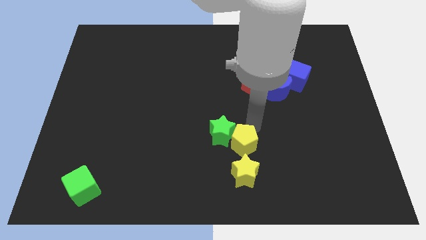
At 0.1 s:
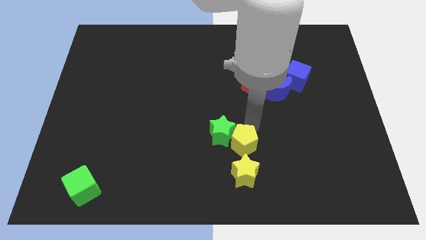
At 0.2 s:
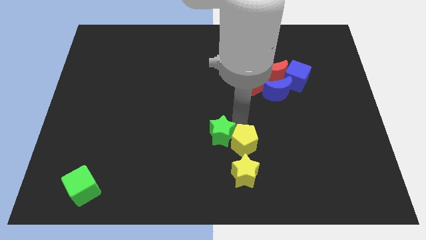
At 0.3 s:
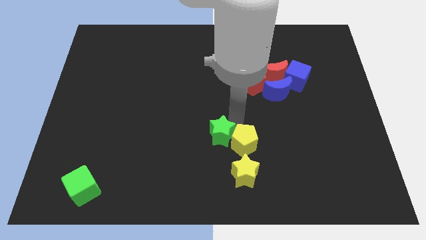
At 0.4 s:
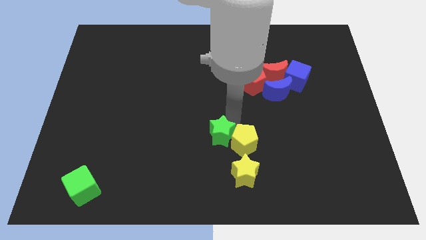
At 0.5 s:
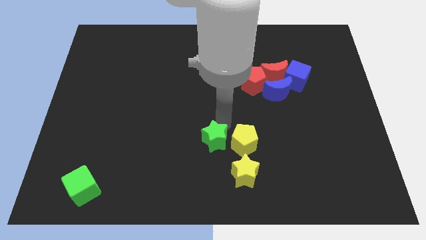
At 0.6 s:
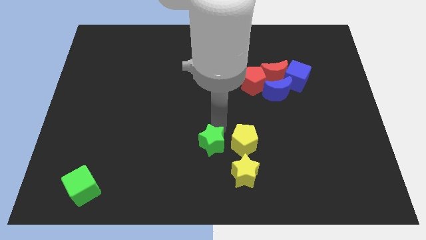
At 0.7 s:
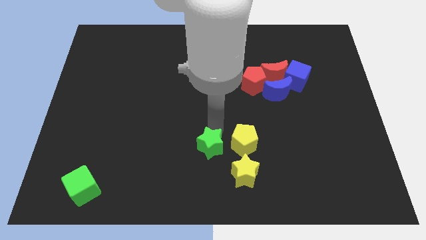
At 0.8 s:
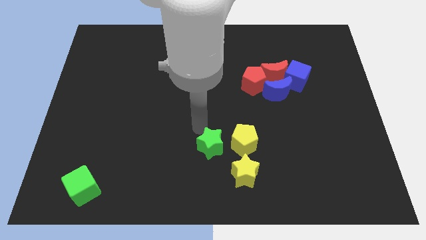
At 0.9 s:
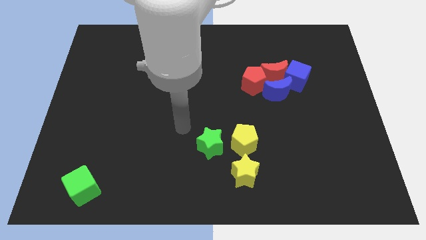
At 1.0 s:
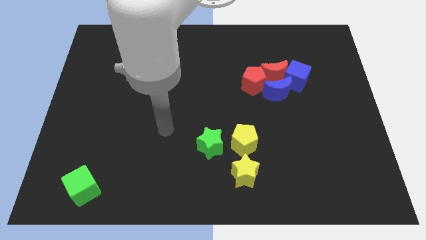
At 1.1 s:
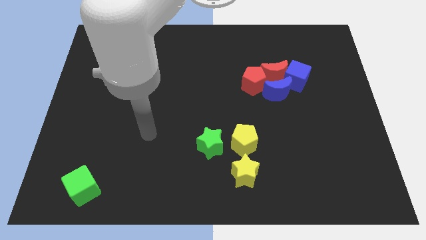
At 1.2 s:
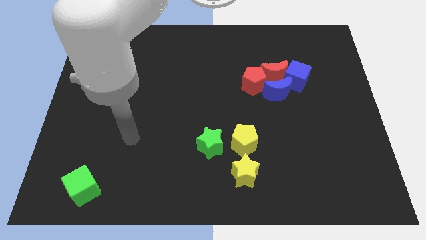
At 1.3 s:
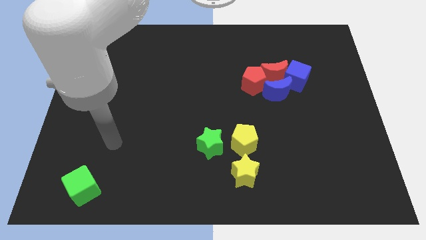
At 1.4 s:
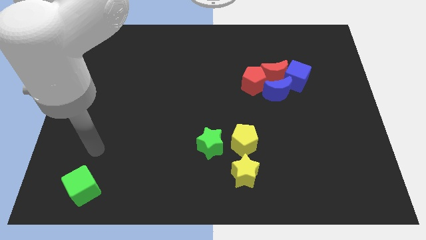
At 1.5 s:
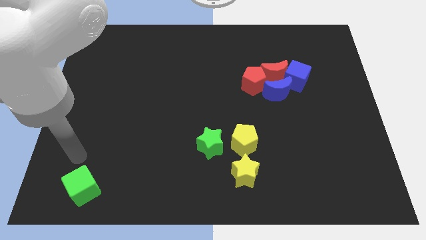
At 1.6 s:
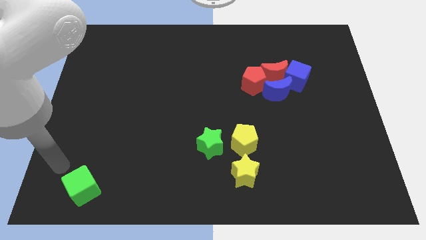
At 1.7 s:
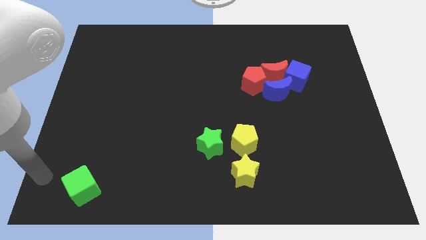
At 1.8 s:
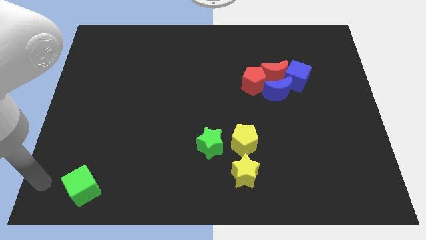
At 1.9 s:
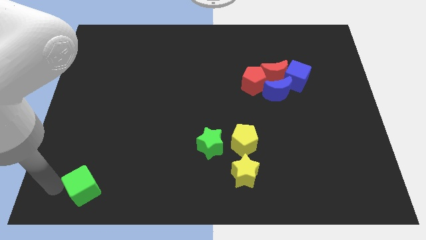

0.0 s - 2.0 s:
slightly push the green star

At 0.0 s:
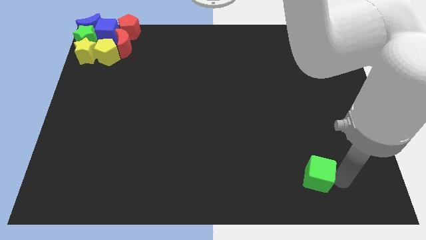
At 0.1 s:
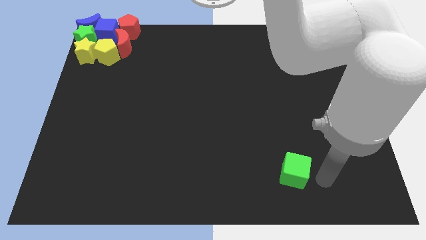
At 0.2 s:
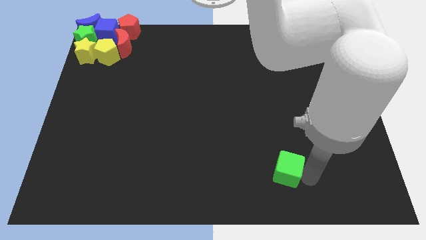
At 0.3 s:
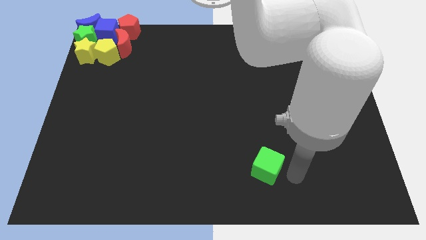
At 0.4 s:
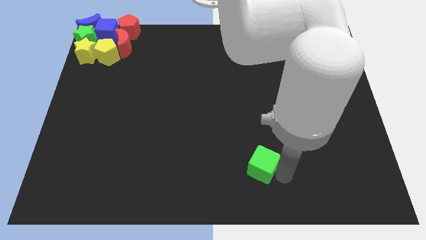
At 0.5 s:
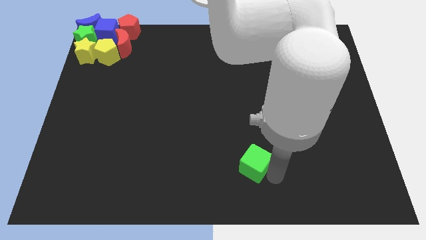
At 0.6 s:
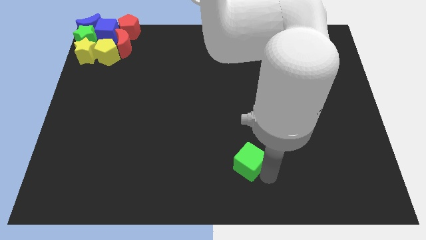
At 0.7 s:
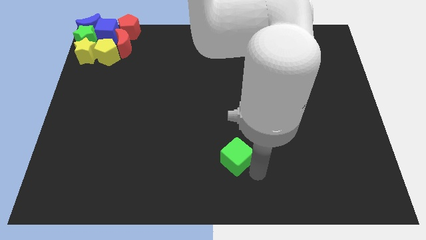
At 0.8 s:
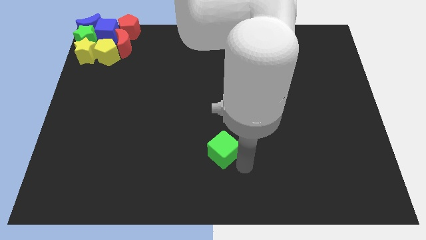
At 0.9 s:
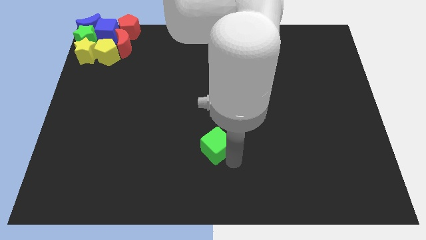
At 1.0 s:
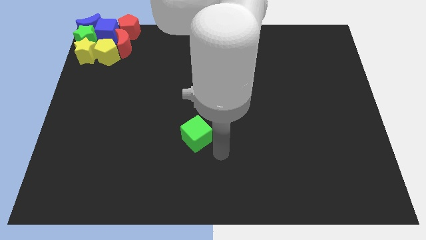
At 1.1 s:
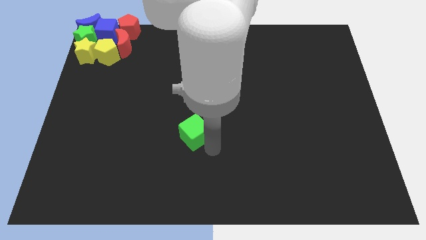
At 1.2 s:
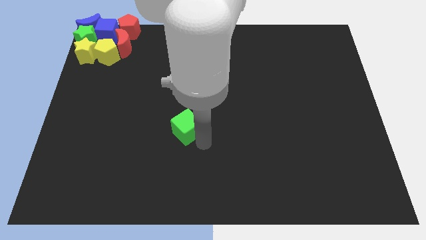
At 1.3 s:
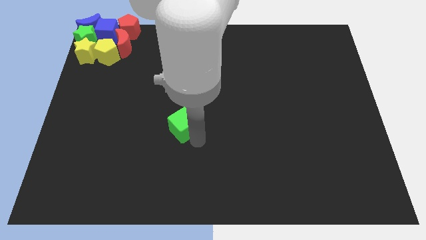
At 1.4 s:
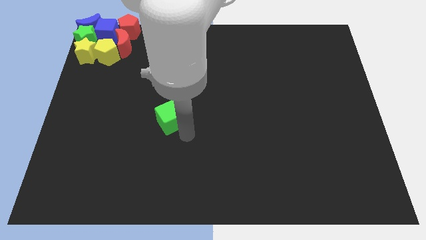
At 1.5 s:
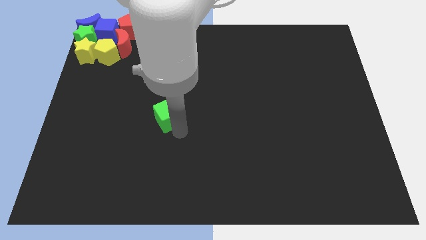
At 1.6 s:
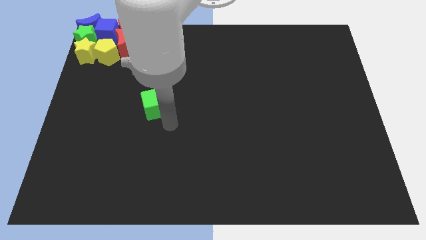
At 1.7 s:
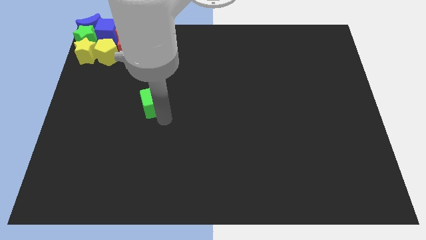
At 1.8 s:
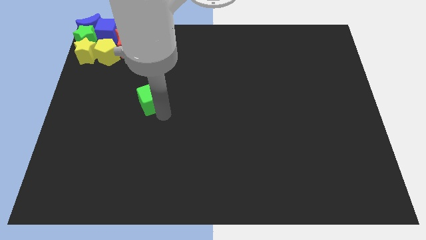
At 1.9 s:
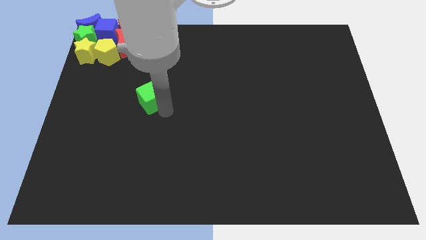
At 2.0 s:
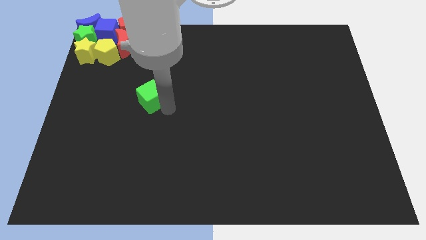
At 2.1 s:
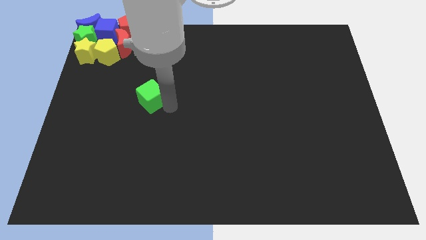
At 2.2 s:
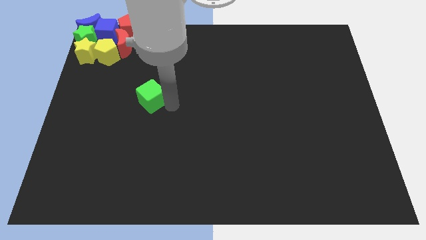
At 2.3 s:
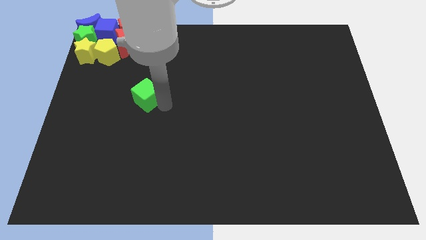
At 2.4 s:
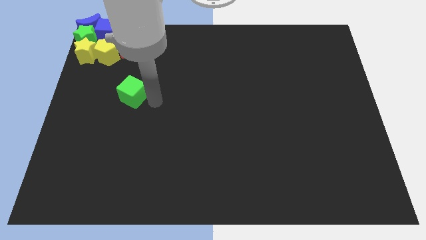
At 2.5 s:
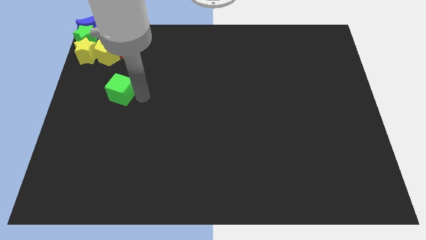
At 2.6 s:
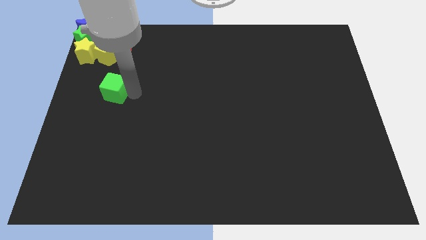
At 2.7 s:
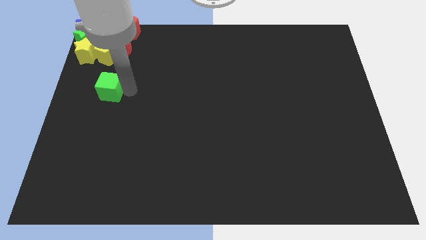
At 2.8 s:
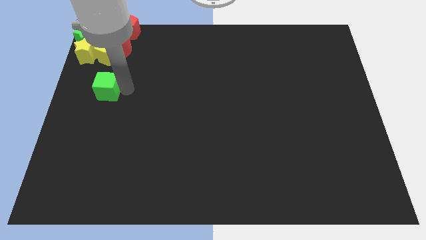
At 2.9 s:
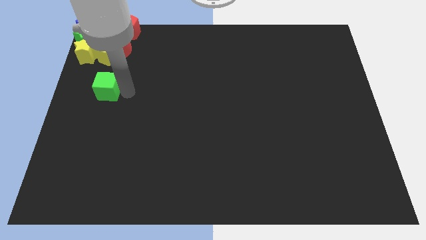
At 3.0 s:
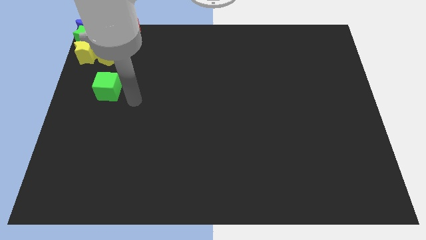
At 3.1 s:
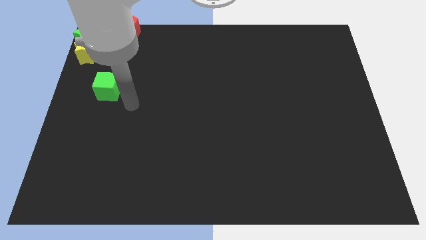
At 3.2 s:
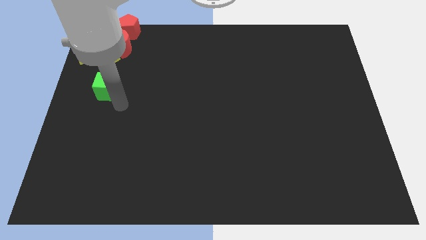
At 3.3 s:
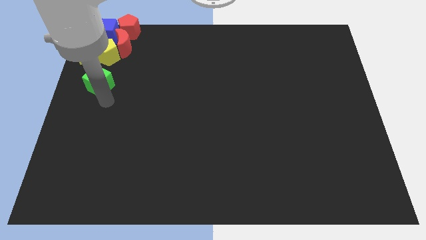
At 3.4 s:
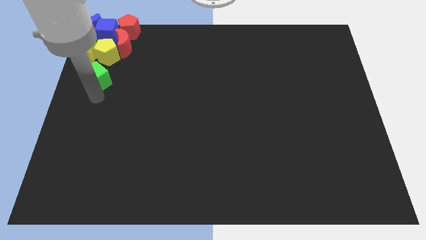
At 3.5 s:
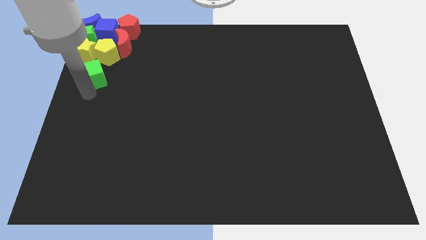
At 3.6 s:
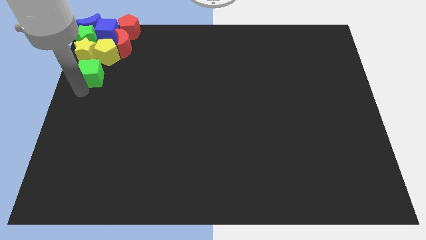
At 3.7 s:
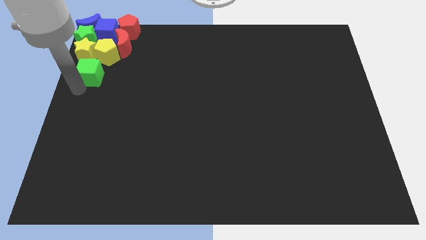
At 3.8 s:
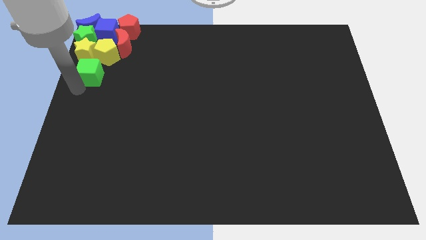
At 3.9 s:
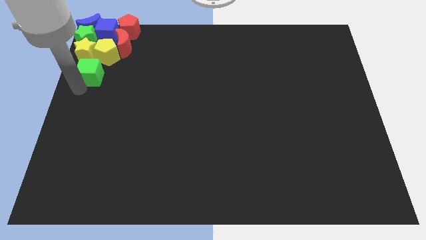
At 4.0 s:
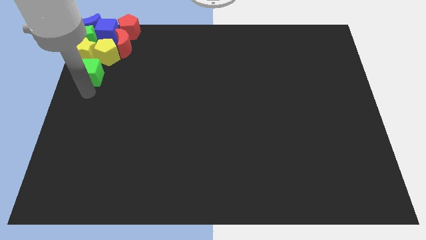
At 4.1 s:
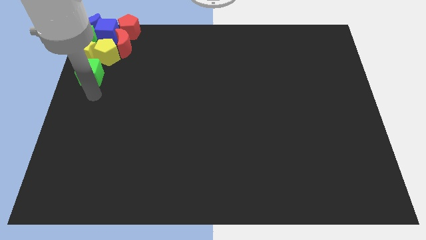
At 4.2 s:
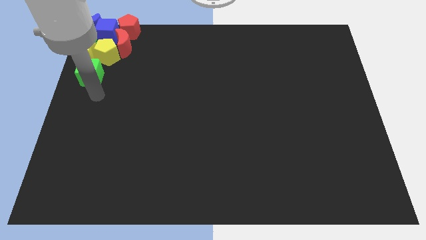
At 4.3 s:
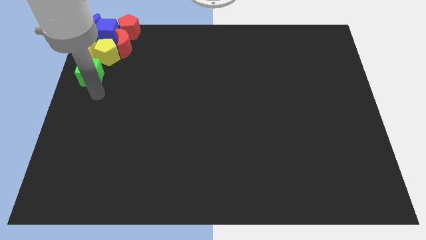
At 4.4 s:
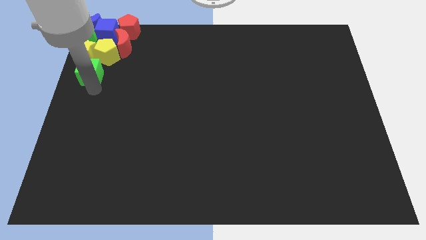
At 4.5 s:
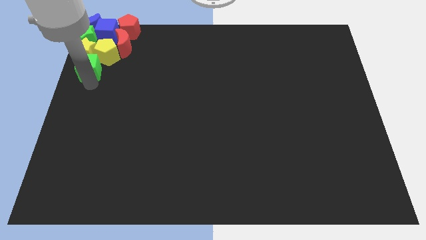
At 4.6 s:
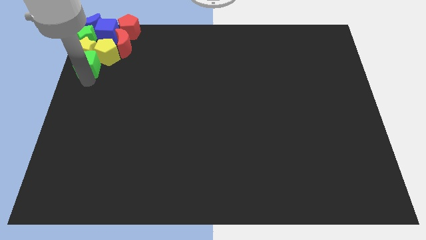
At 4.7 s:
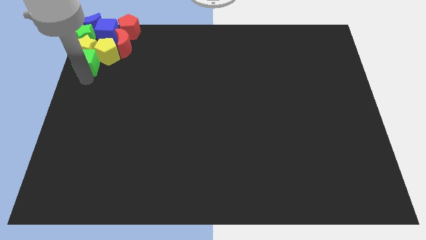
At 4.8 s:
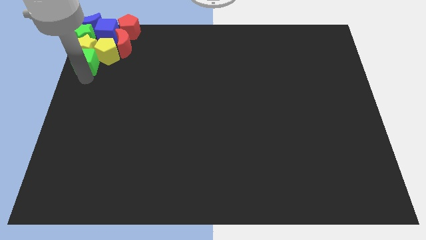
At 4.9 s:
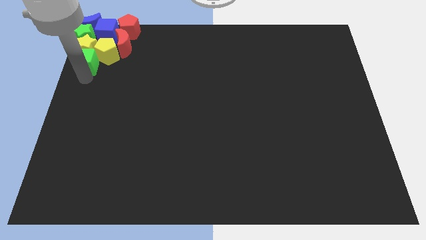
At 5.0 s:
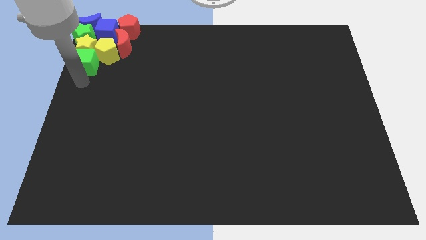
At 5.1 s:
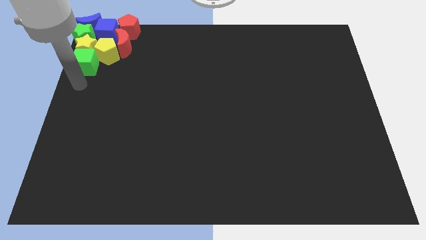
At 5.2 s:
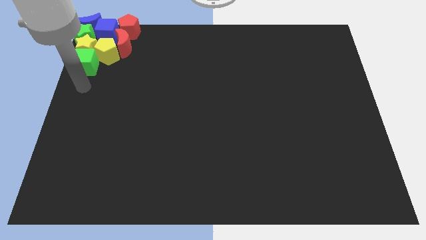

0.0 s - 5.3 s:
push green cube into the group of blocks

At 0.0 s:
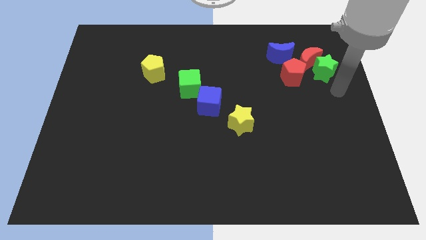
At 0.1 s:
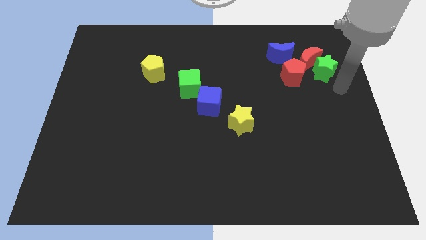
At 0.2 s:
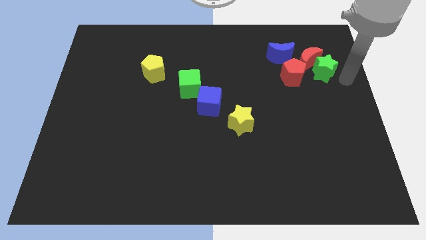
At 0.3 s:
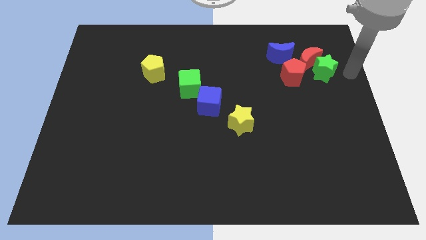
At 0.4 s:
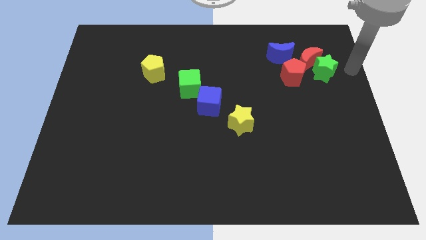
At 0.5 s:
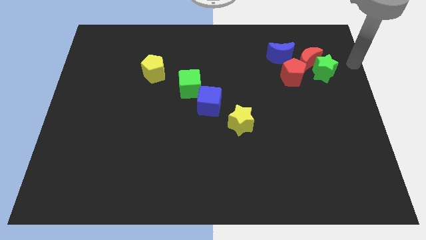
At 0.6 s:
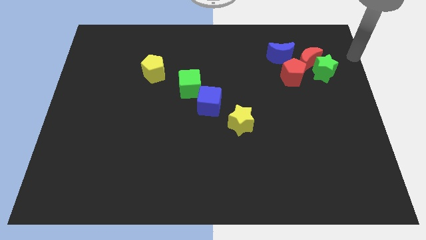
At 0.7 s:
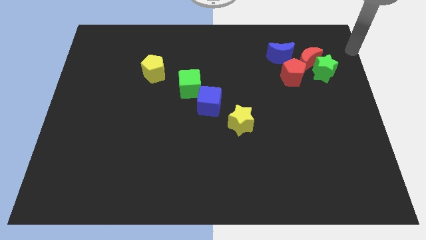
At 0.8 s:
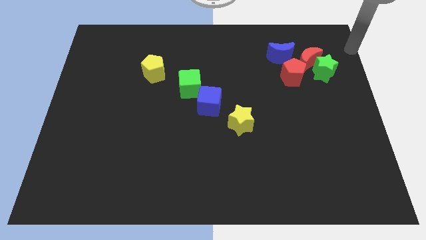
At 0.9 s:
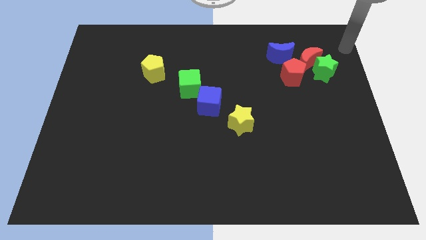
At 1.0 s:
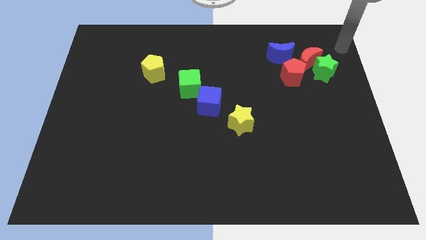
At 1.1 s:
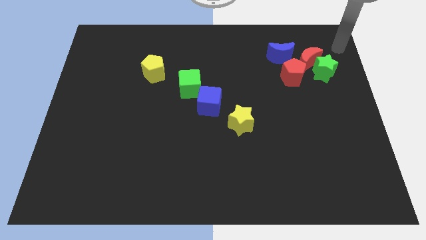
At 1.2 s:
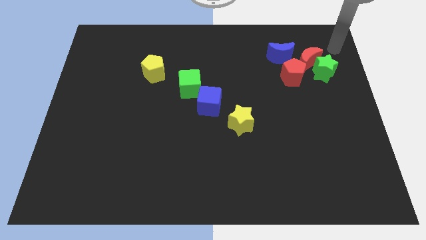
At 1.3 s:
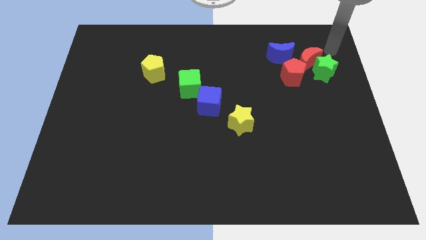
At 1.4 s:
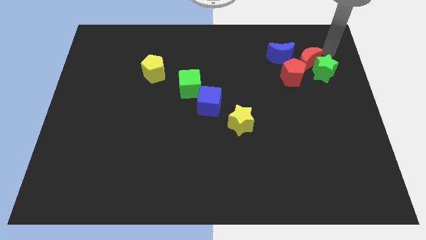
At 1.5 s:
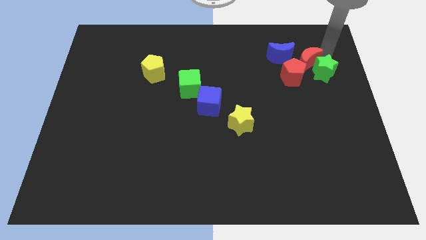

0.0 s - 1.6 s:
point your arm at the top right side of the red moon
